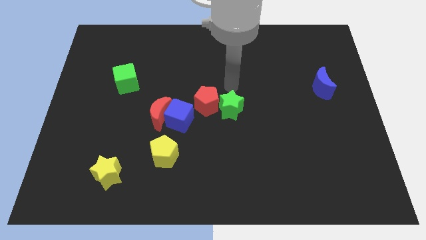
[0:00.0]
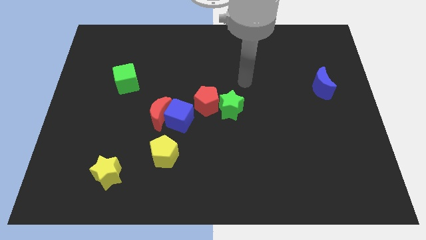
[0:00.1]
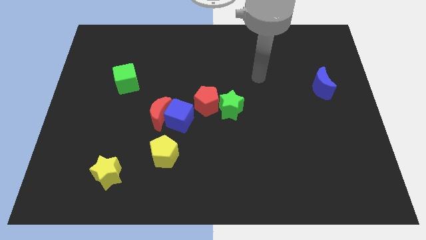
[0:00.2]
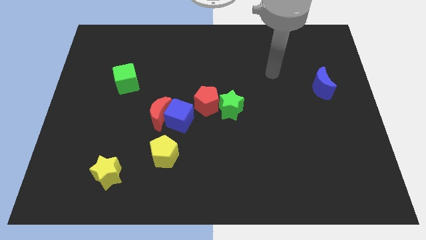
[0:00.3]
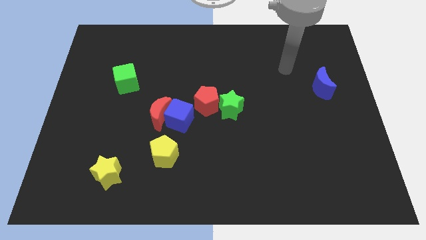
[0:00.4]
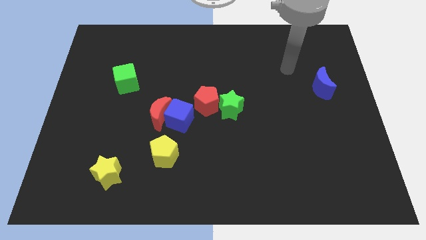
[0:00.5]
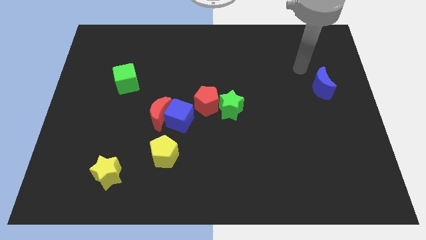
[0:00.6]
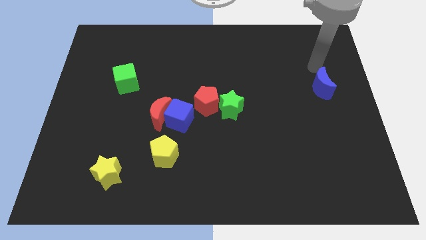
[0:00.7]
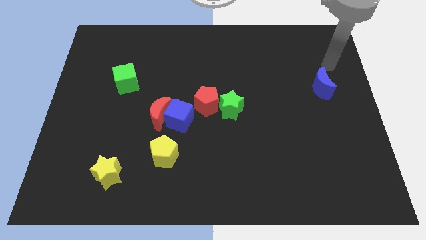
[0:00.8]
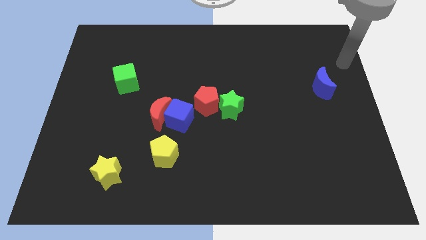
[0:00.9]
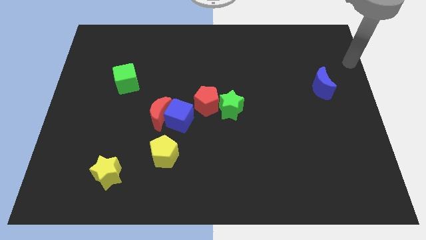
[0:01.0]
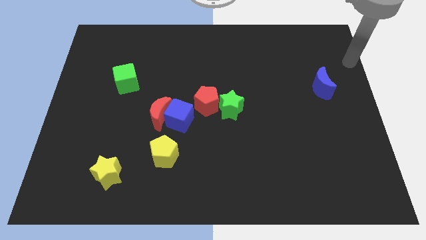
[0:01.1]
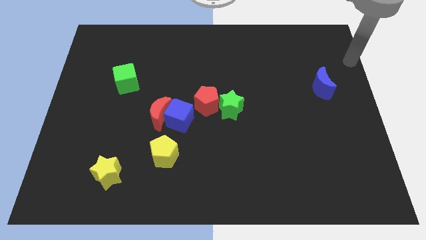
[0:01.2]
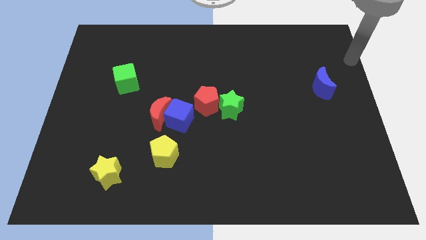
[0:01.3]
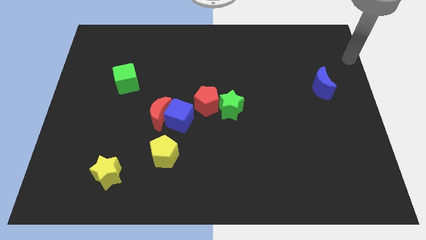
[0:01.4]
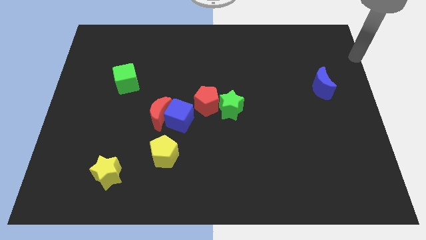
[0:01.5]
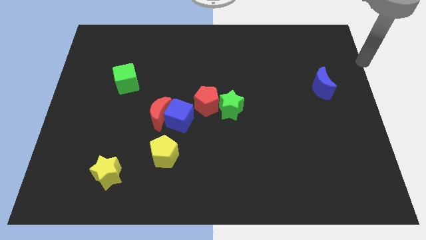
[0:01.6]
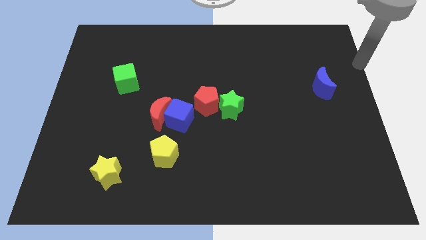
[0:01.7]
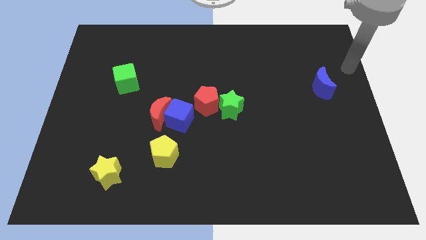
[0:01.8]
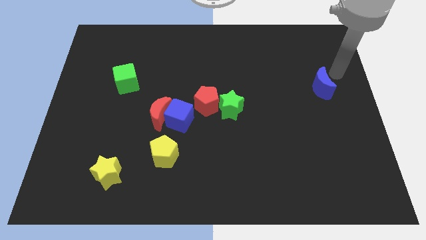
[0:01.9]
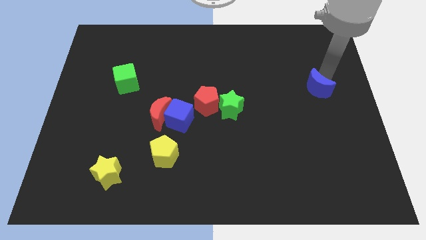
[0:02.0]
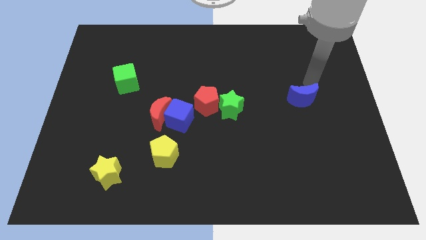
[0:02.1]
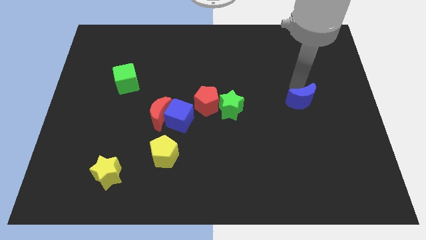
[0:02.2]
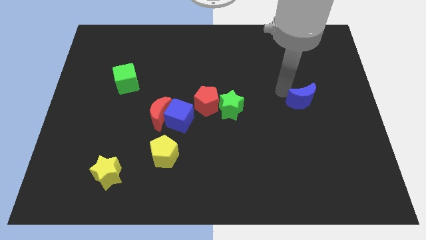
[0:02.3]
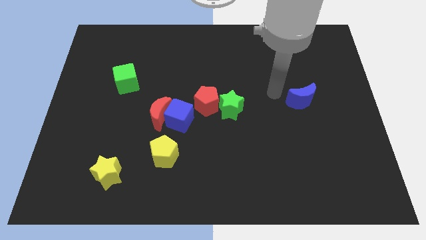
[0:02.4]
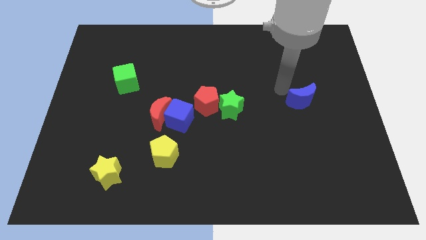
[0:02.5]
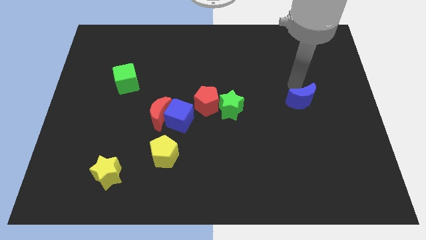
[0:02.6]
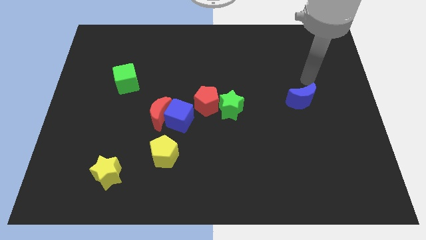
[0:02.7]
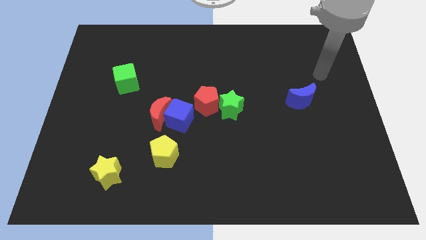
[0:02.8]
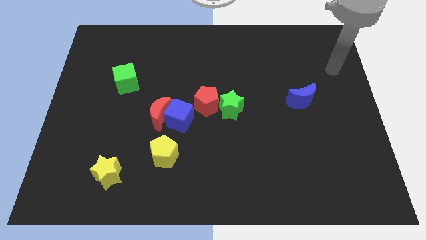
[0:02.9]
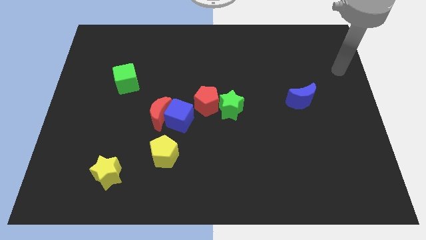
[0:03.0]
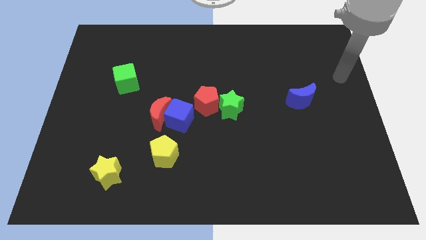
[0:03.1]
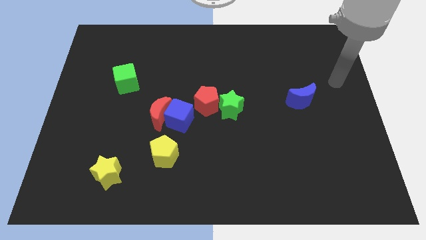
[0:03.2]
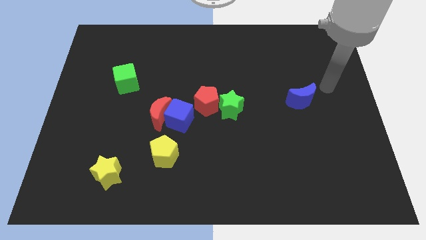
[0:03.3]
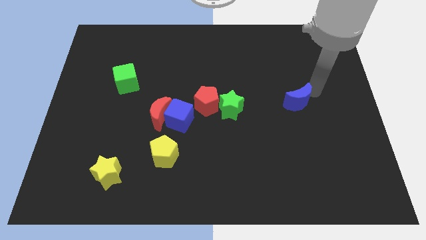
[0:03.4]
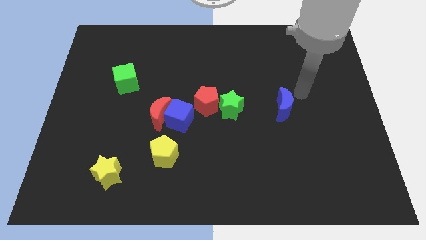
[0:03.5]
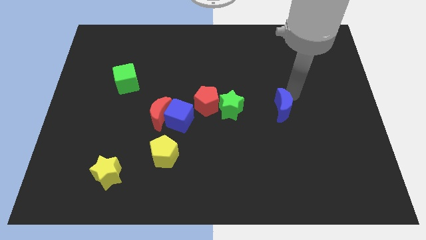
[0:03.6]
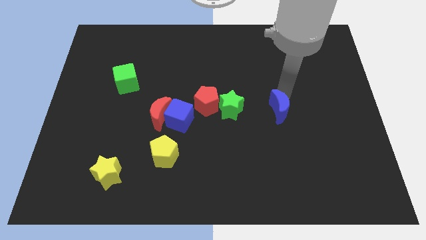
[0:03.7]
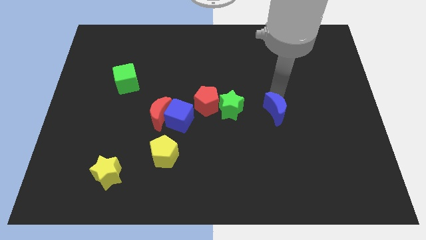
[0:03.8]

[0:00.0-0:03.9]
push the blue crescent to the right of the green star

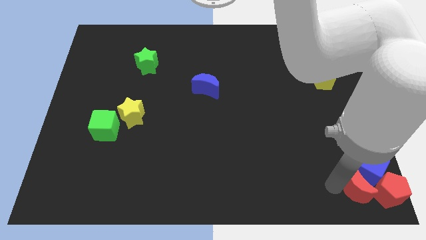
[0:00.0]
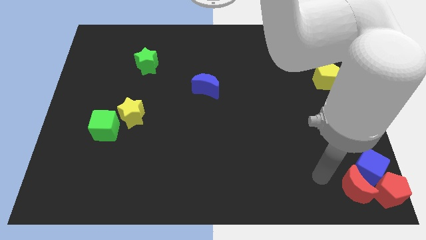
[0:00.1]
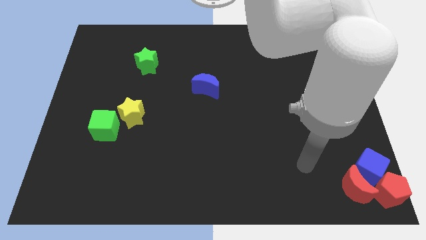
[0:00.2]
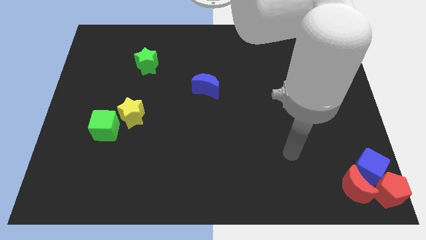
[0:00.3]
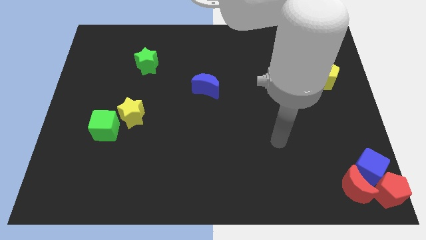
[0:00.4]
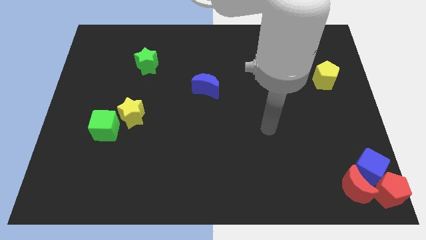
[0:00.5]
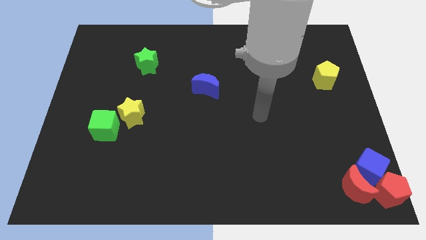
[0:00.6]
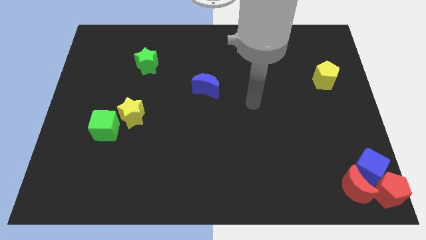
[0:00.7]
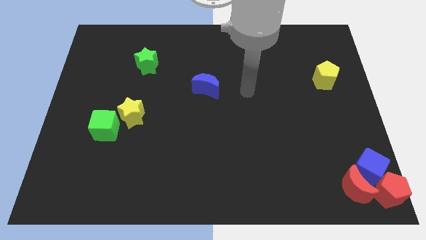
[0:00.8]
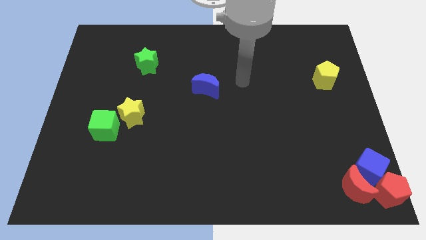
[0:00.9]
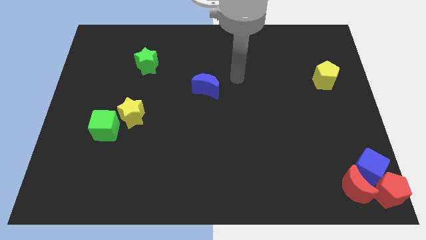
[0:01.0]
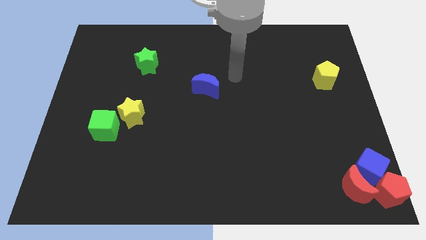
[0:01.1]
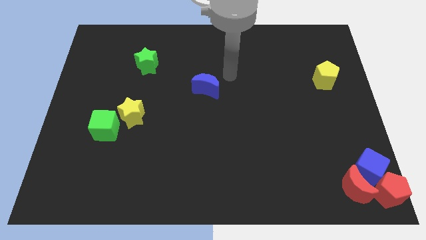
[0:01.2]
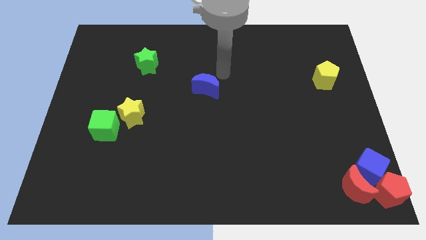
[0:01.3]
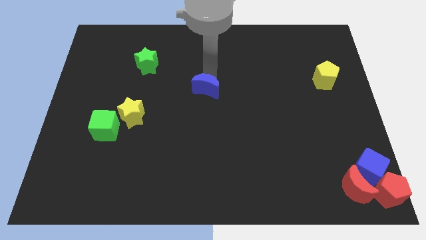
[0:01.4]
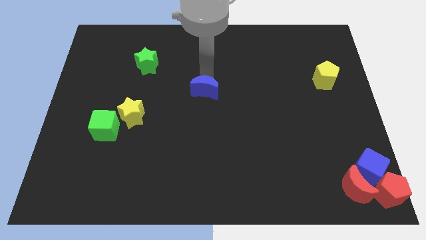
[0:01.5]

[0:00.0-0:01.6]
place the arm above the blue moon

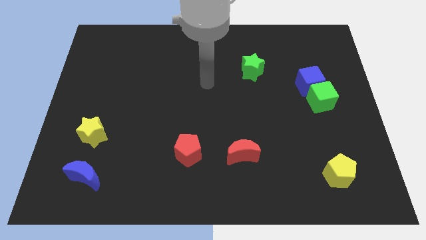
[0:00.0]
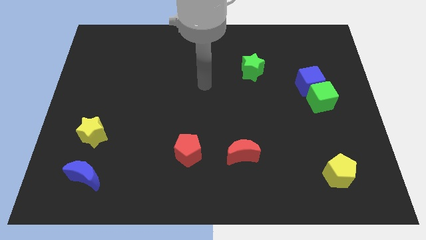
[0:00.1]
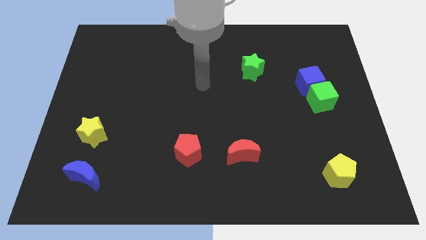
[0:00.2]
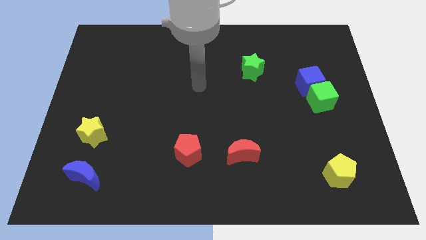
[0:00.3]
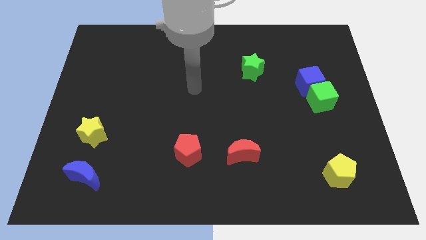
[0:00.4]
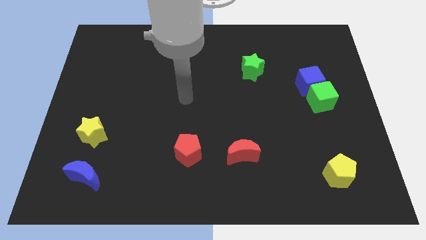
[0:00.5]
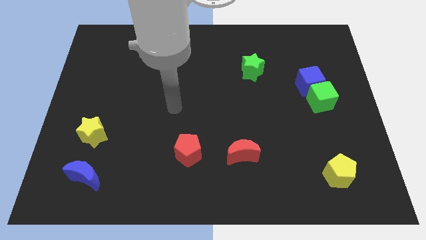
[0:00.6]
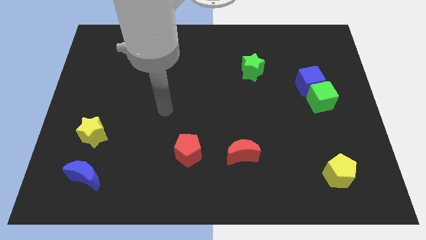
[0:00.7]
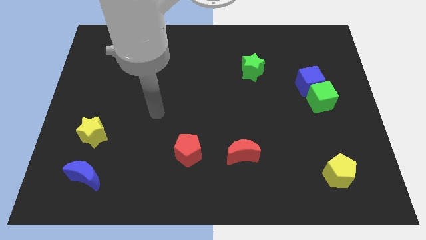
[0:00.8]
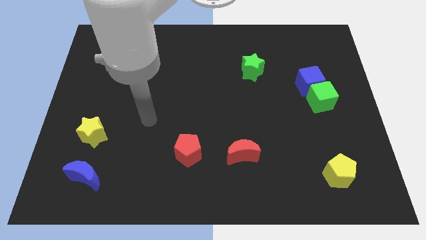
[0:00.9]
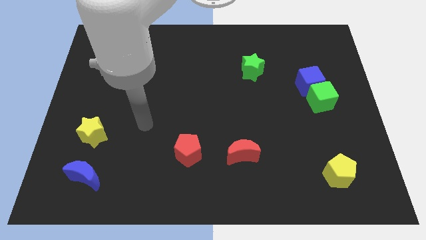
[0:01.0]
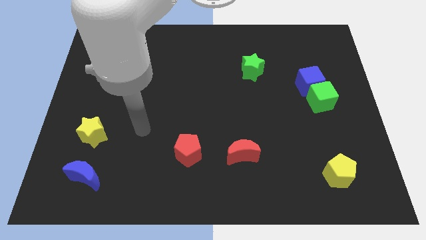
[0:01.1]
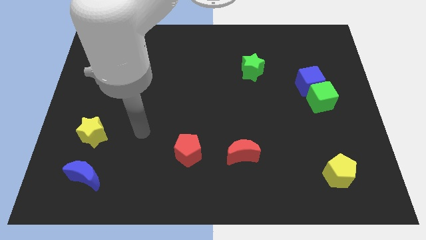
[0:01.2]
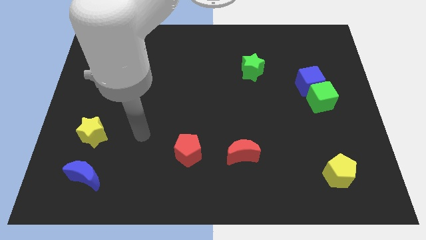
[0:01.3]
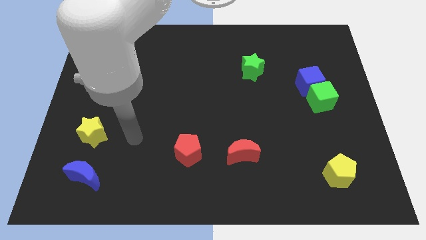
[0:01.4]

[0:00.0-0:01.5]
place your arm in between the yellow star and red pentagon

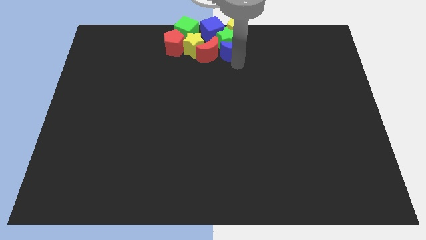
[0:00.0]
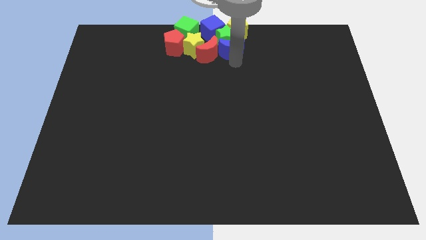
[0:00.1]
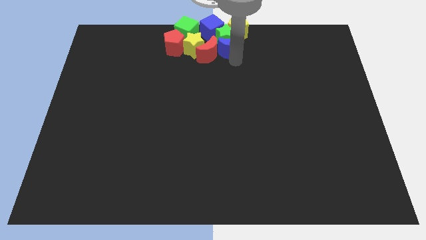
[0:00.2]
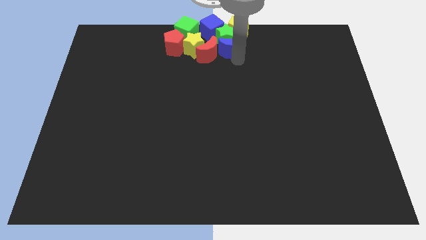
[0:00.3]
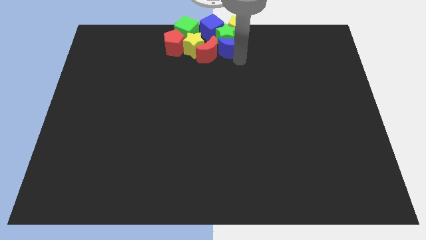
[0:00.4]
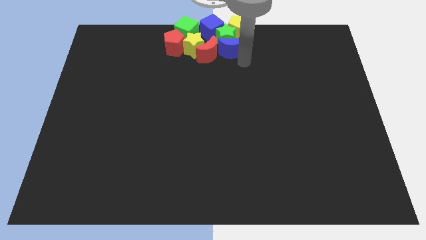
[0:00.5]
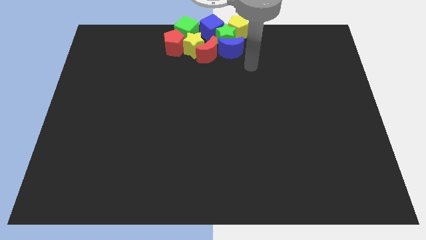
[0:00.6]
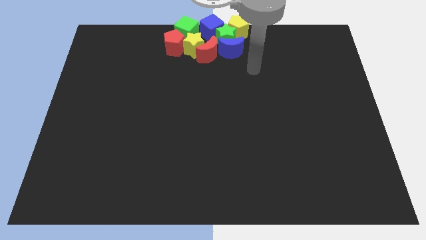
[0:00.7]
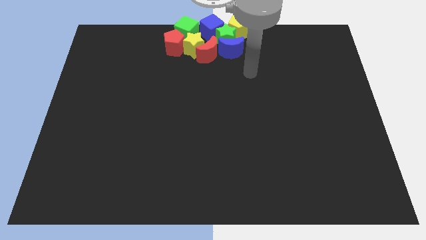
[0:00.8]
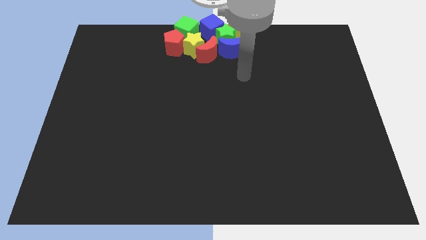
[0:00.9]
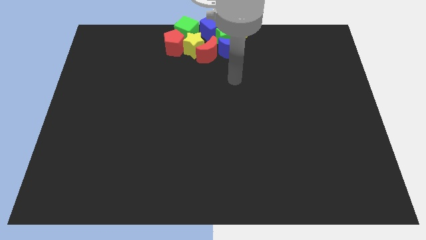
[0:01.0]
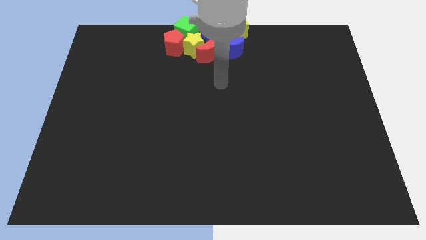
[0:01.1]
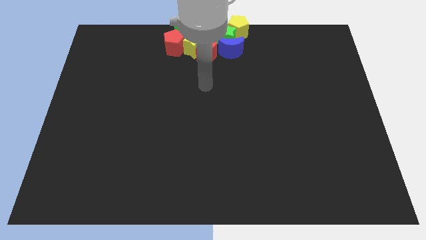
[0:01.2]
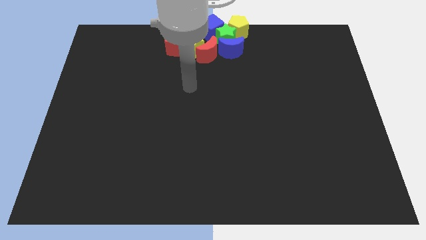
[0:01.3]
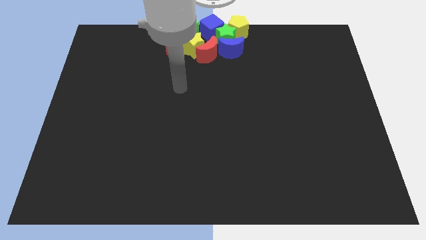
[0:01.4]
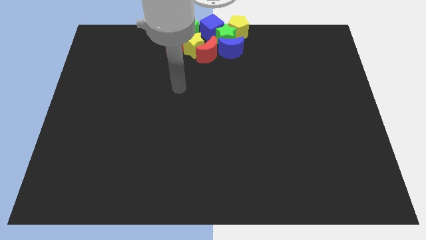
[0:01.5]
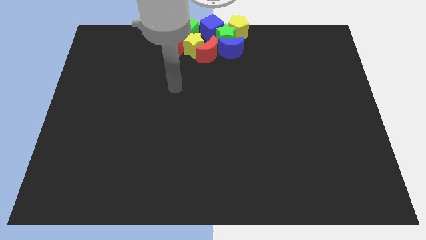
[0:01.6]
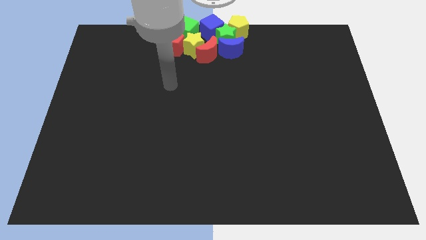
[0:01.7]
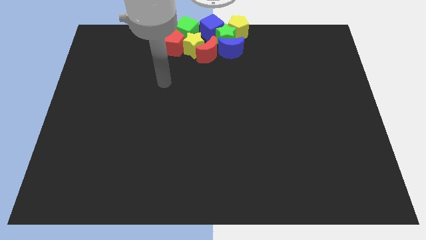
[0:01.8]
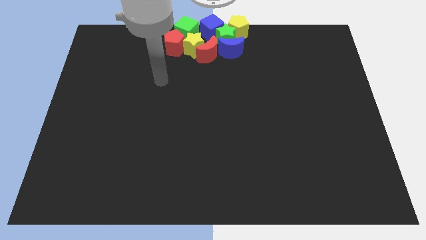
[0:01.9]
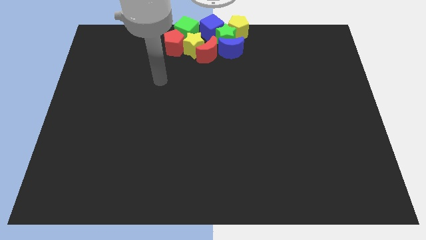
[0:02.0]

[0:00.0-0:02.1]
move the blue moon into the green star
